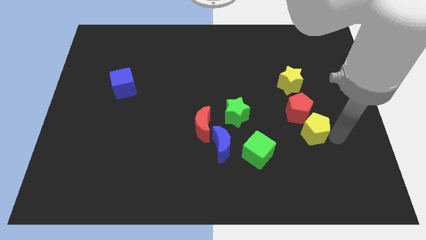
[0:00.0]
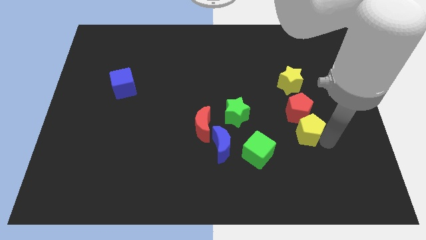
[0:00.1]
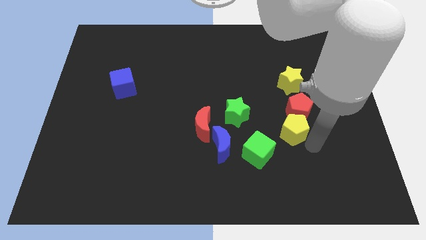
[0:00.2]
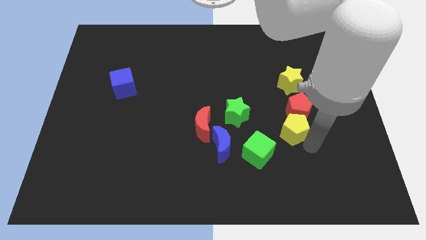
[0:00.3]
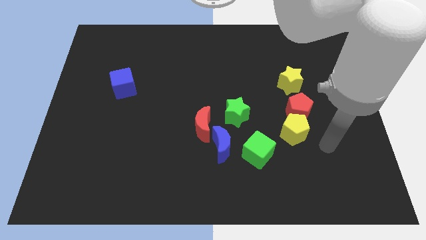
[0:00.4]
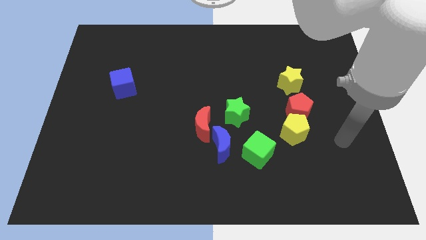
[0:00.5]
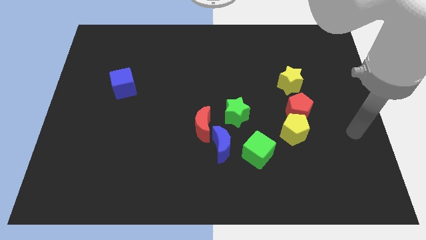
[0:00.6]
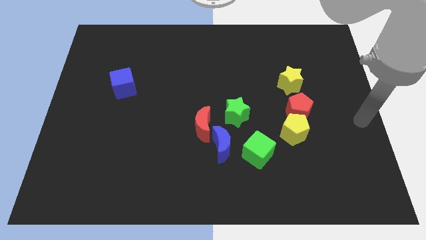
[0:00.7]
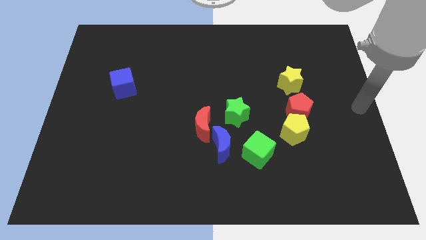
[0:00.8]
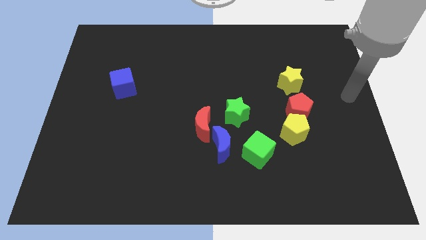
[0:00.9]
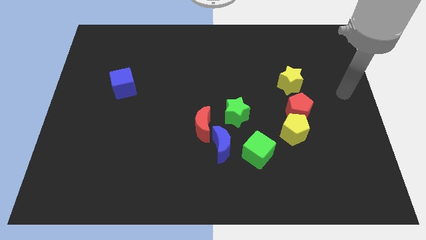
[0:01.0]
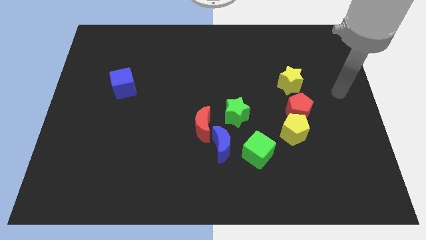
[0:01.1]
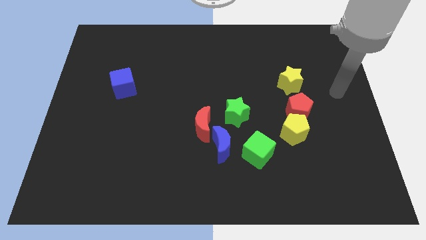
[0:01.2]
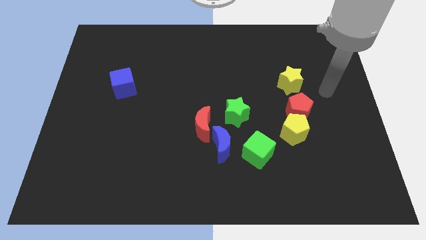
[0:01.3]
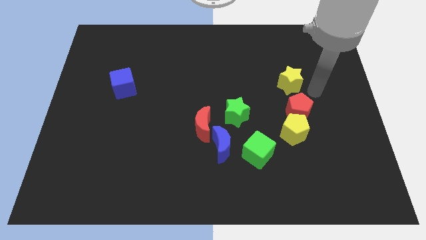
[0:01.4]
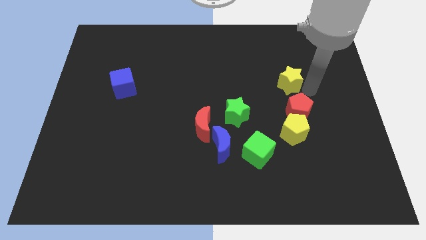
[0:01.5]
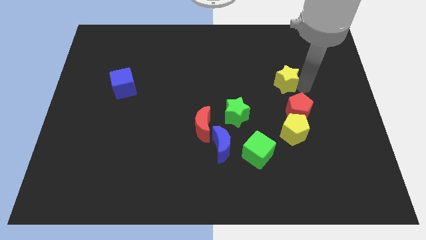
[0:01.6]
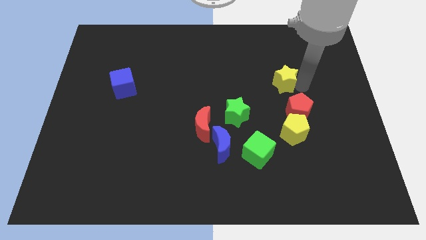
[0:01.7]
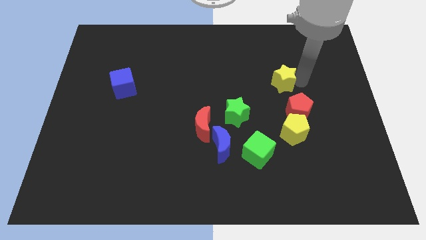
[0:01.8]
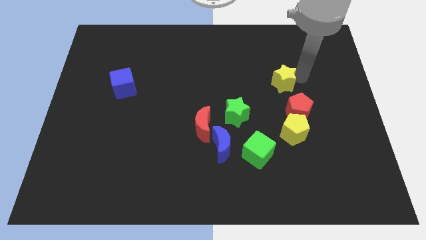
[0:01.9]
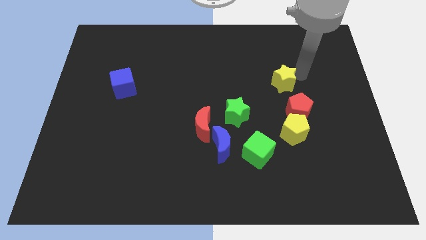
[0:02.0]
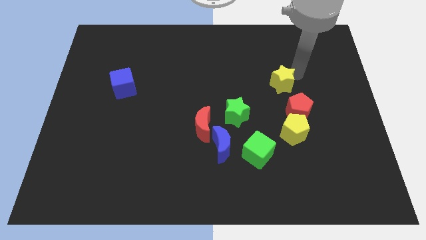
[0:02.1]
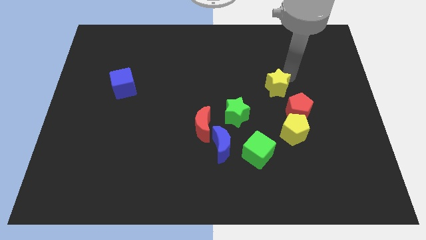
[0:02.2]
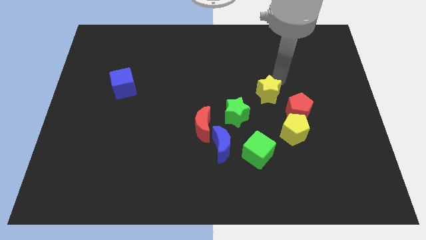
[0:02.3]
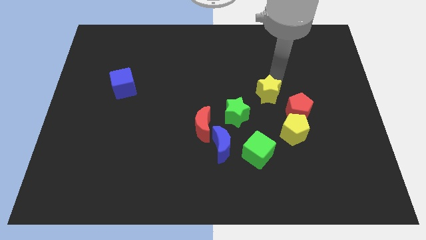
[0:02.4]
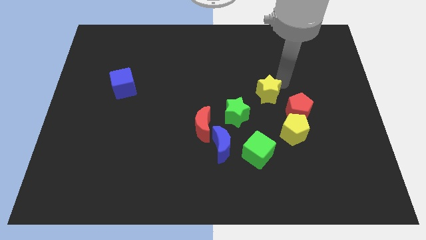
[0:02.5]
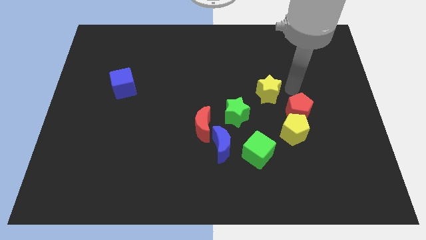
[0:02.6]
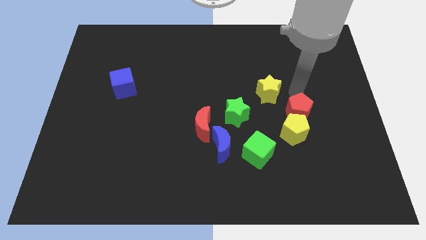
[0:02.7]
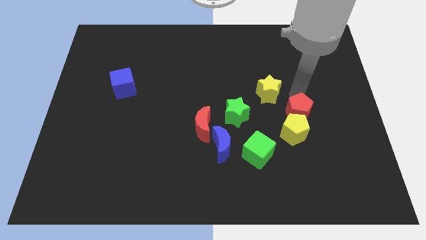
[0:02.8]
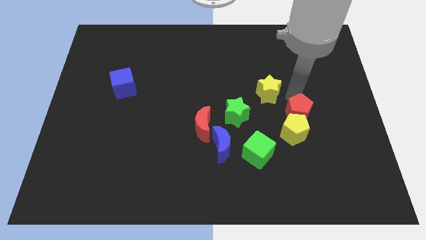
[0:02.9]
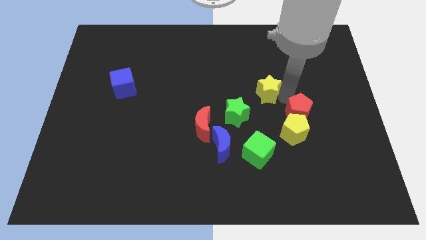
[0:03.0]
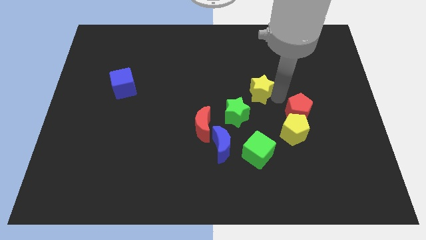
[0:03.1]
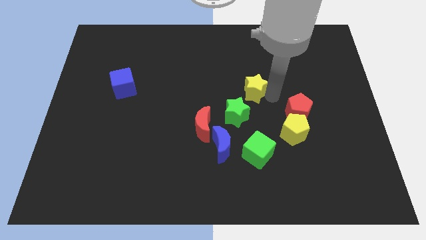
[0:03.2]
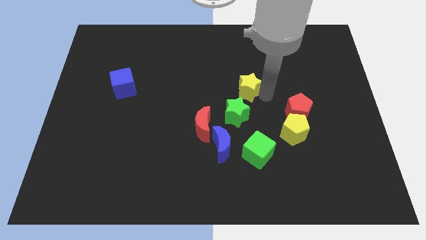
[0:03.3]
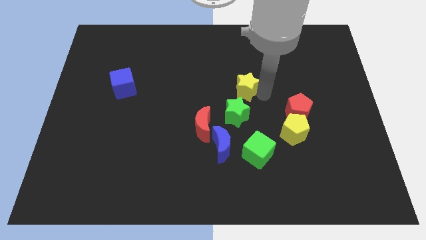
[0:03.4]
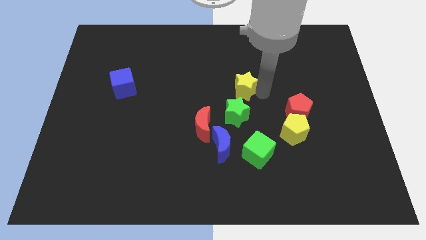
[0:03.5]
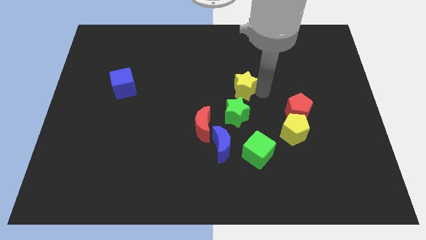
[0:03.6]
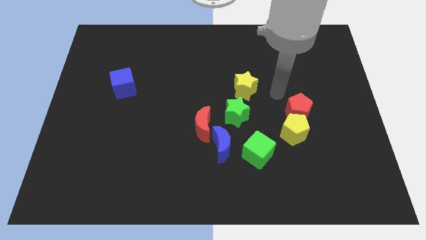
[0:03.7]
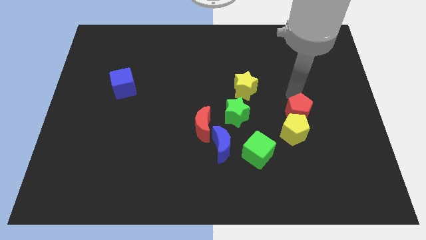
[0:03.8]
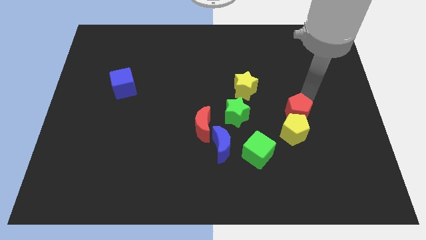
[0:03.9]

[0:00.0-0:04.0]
place the yellow star above the green star

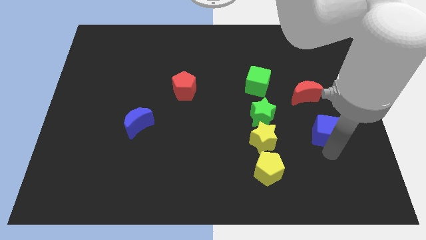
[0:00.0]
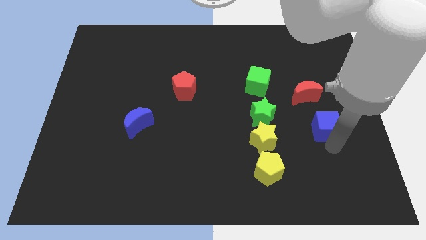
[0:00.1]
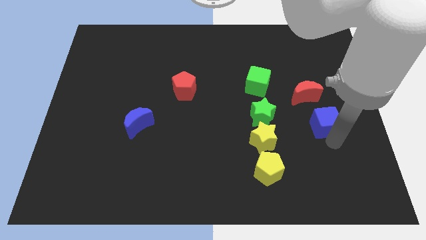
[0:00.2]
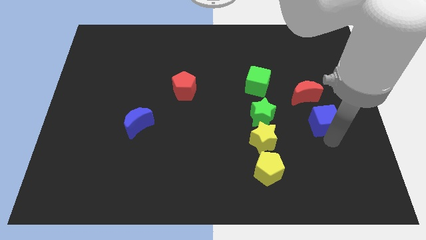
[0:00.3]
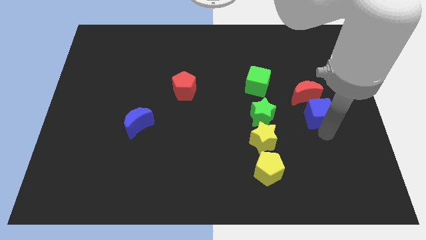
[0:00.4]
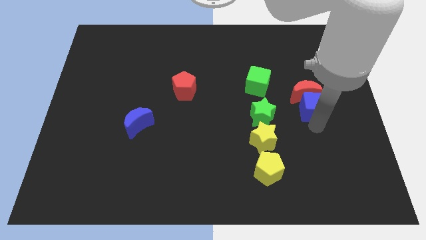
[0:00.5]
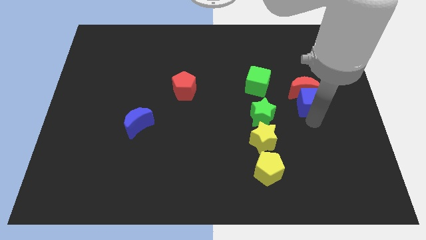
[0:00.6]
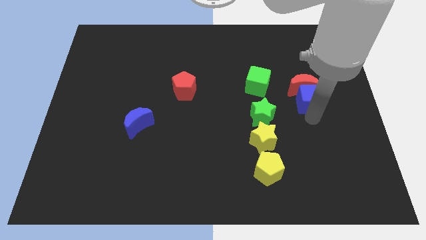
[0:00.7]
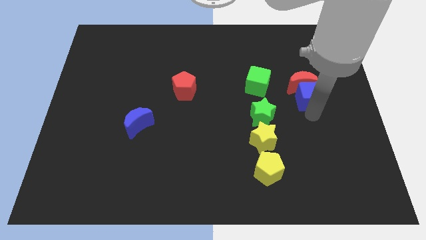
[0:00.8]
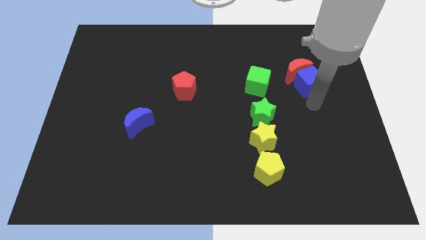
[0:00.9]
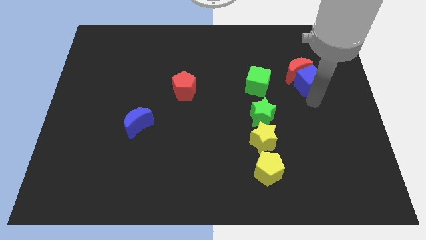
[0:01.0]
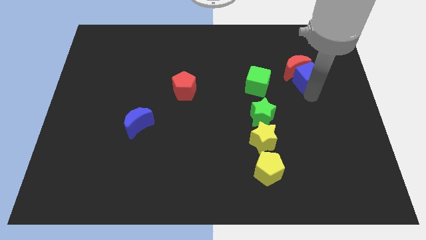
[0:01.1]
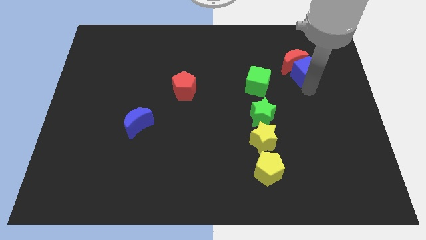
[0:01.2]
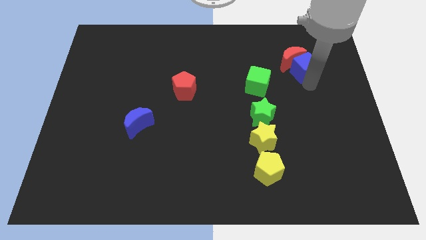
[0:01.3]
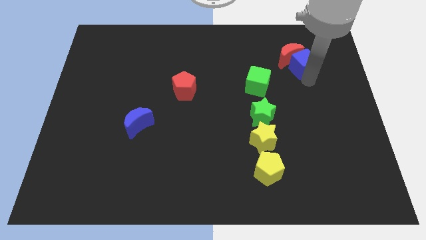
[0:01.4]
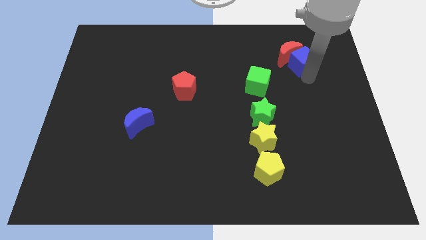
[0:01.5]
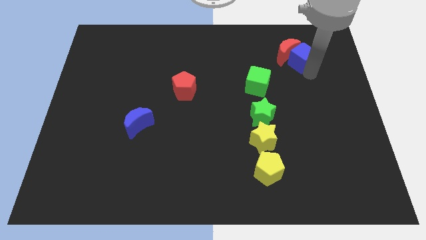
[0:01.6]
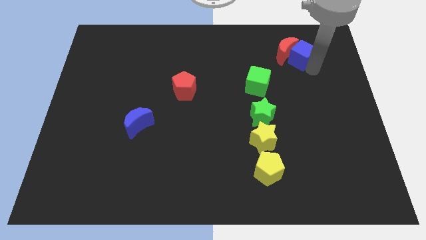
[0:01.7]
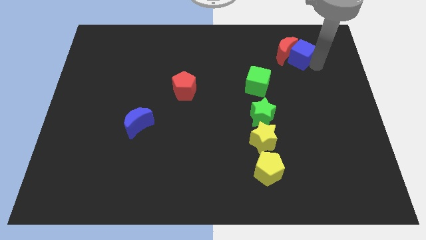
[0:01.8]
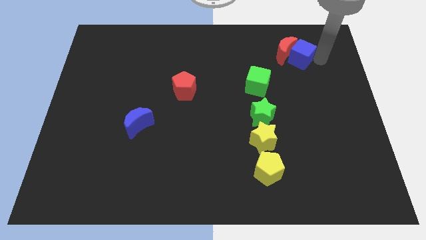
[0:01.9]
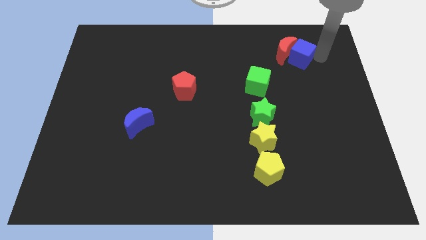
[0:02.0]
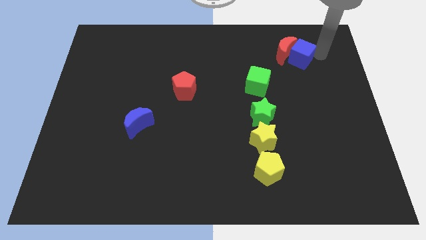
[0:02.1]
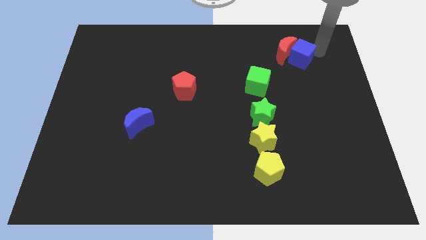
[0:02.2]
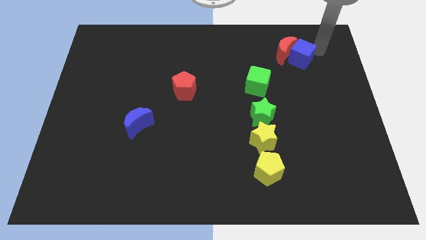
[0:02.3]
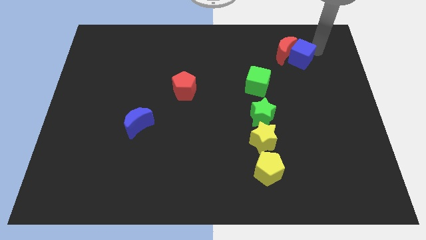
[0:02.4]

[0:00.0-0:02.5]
move the blue cube into red moon

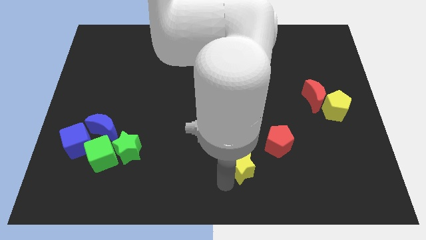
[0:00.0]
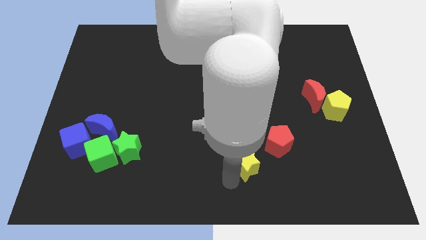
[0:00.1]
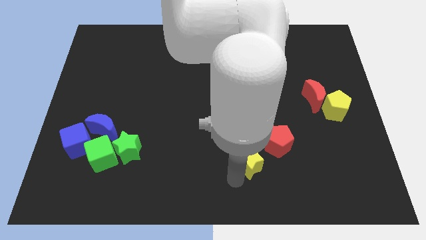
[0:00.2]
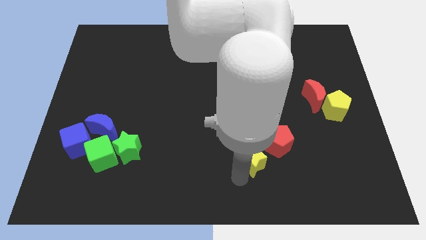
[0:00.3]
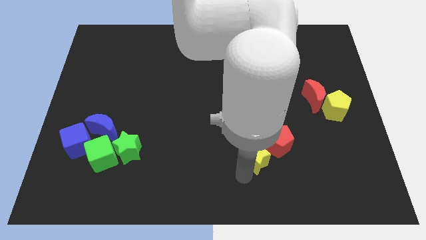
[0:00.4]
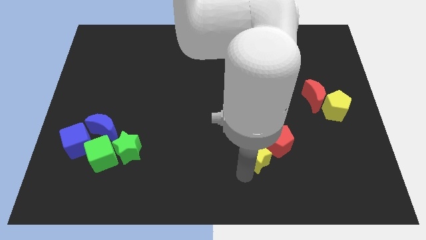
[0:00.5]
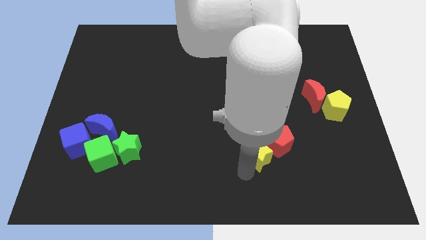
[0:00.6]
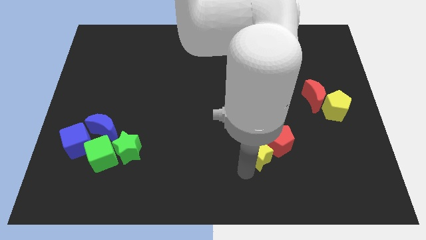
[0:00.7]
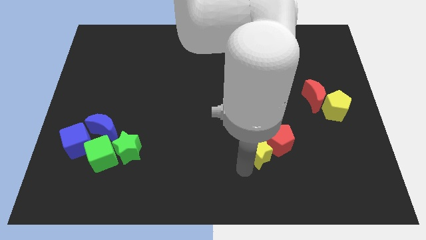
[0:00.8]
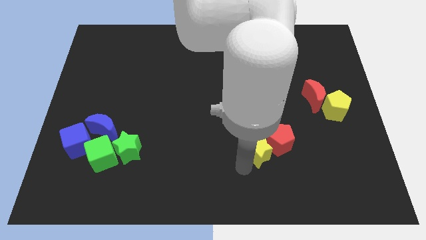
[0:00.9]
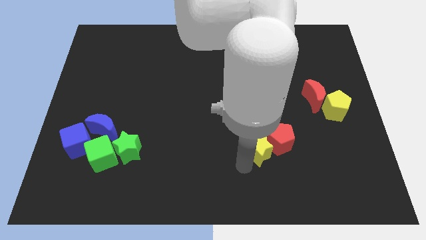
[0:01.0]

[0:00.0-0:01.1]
move the yellow star into the red pentagon towards the bottom right of the board

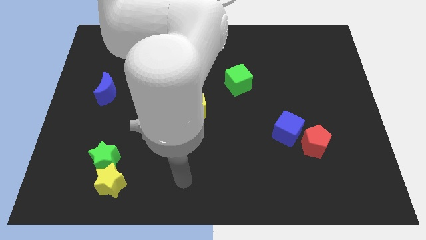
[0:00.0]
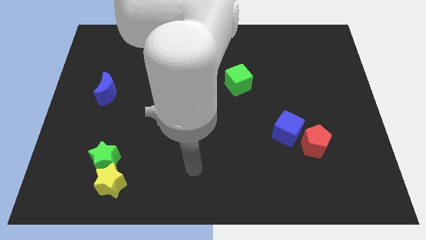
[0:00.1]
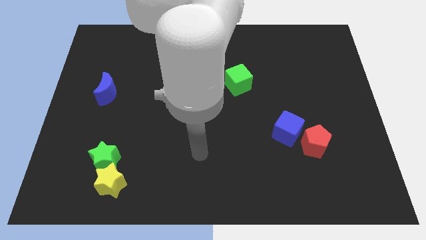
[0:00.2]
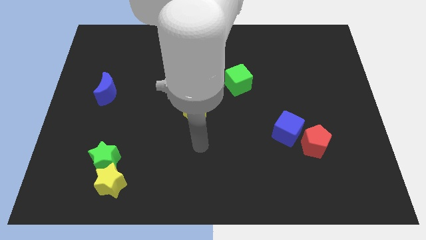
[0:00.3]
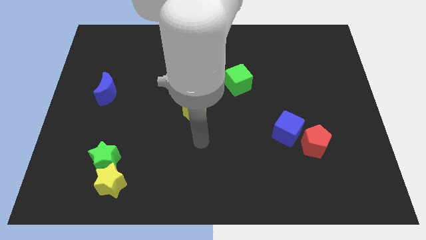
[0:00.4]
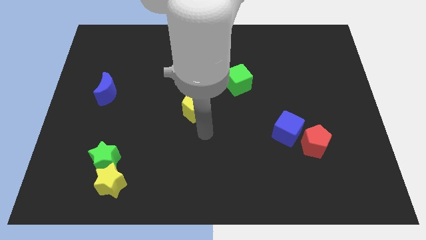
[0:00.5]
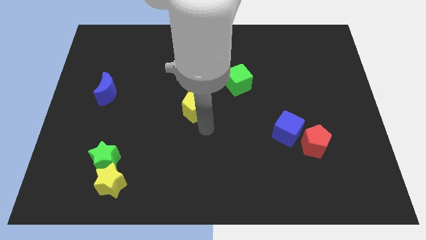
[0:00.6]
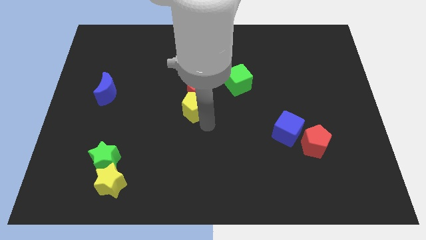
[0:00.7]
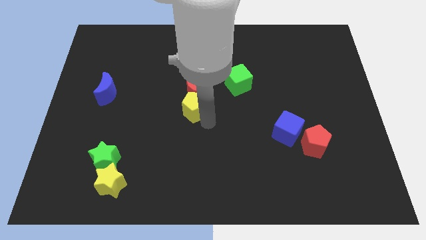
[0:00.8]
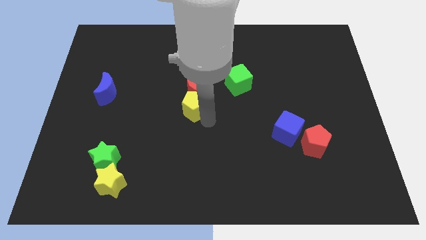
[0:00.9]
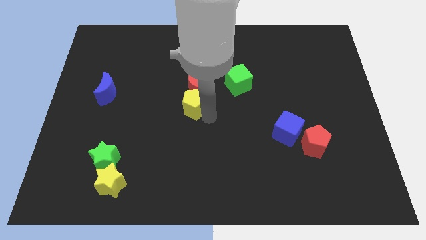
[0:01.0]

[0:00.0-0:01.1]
slide your arm to the center

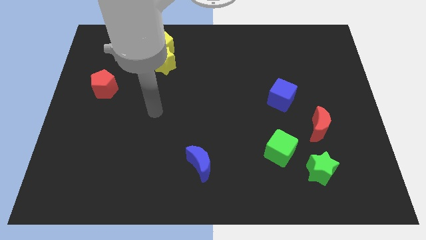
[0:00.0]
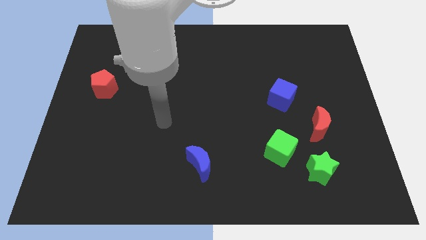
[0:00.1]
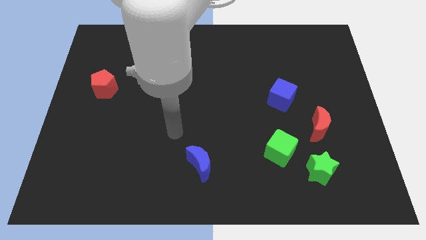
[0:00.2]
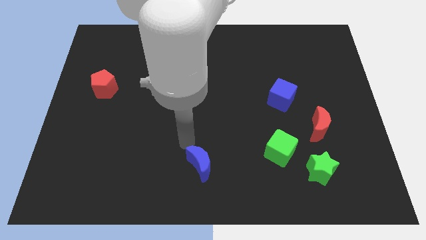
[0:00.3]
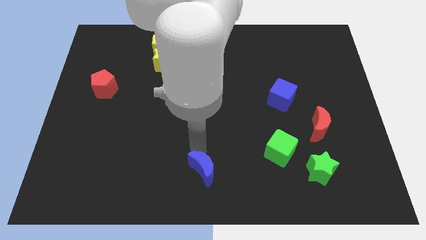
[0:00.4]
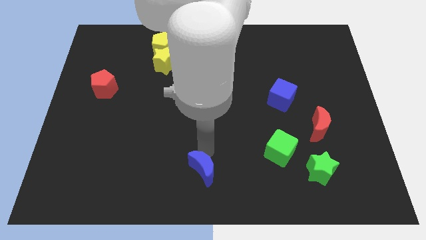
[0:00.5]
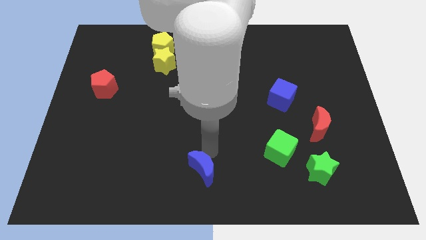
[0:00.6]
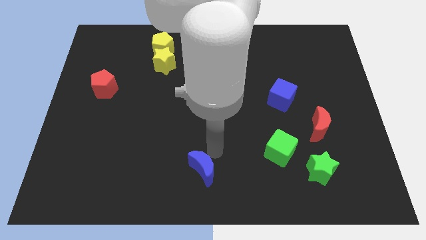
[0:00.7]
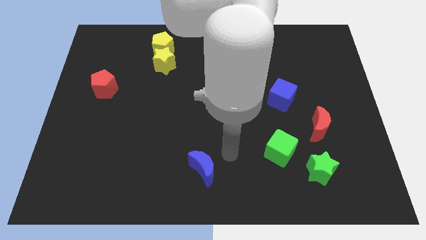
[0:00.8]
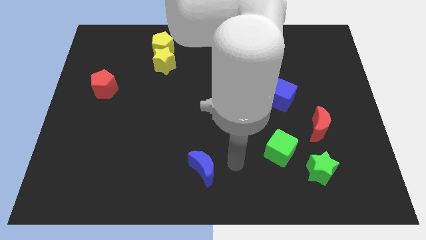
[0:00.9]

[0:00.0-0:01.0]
place the arm to the top side of the blue crescent
